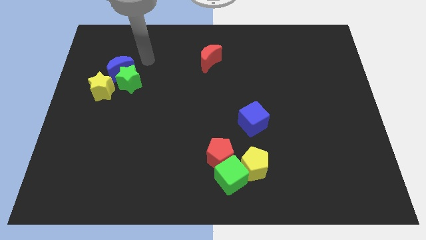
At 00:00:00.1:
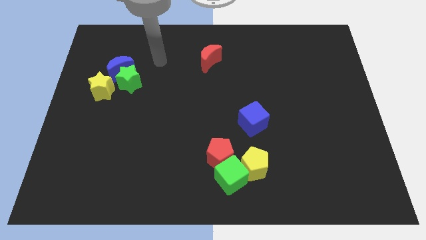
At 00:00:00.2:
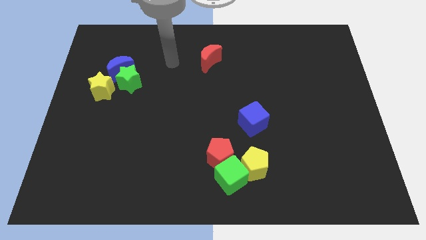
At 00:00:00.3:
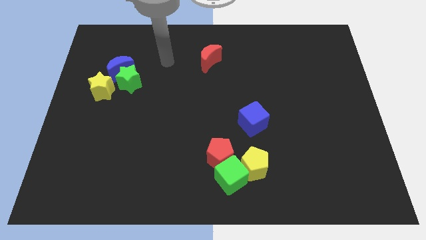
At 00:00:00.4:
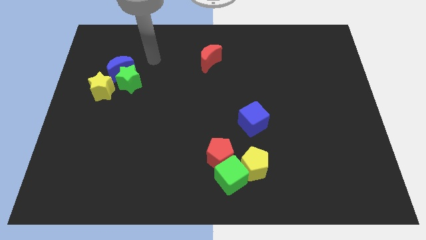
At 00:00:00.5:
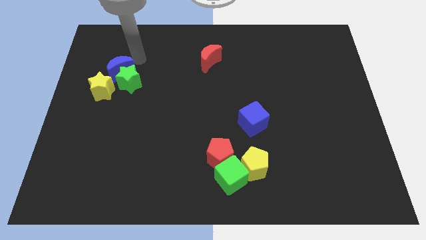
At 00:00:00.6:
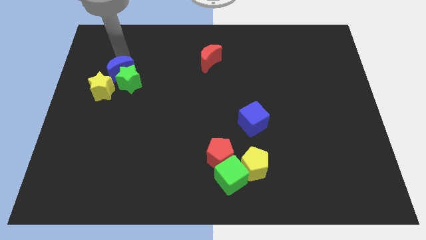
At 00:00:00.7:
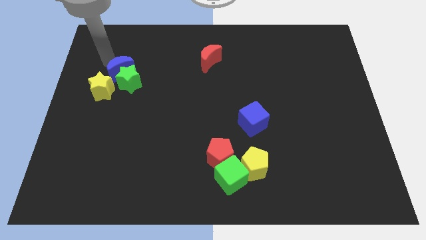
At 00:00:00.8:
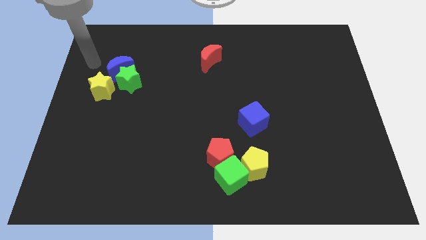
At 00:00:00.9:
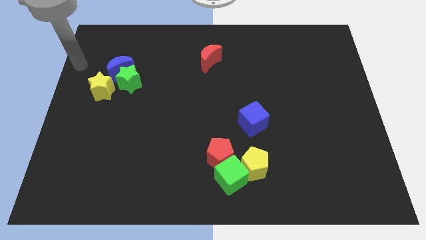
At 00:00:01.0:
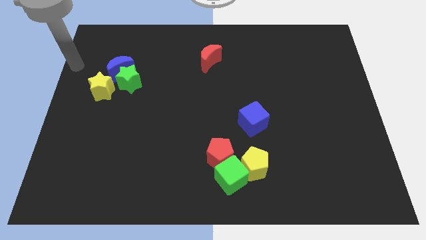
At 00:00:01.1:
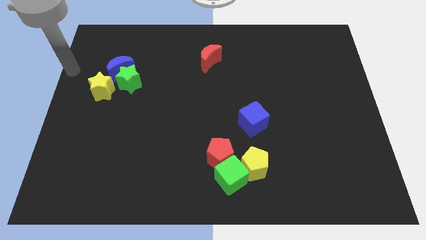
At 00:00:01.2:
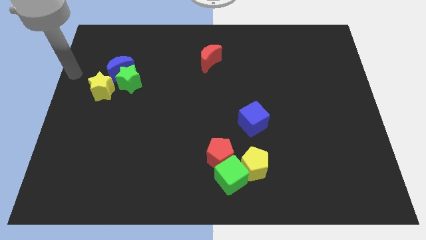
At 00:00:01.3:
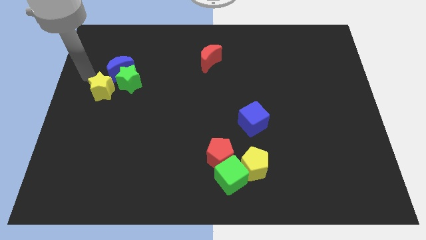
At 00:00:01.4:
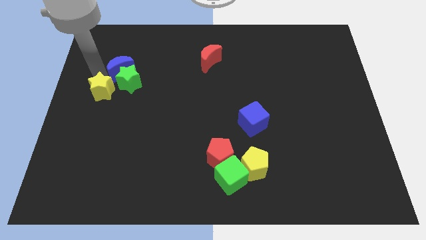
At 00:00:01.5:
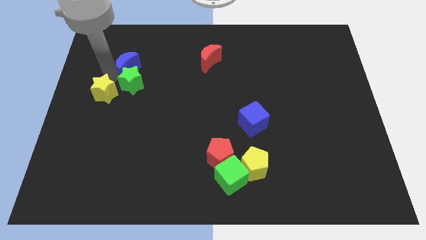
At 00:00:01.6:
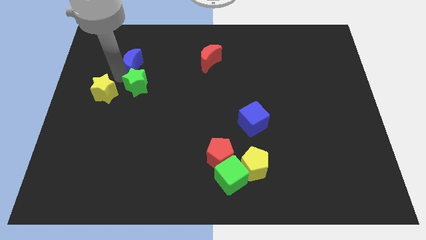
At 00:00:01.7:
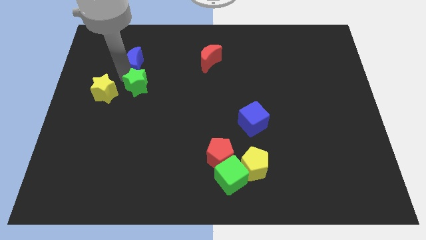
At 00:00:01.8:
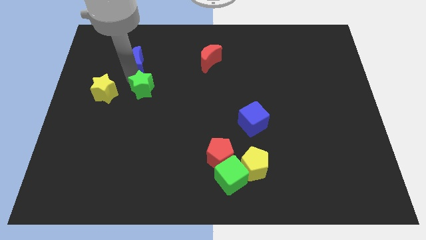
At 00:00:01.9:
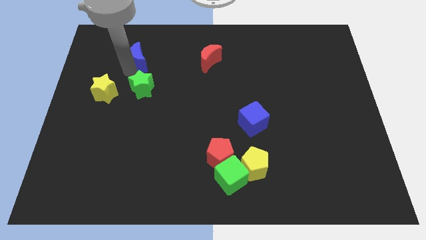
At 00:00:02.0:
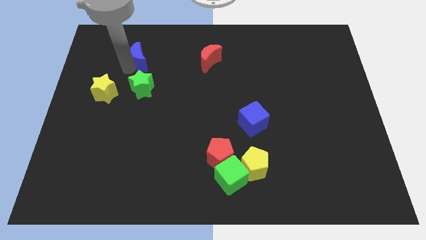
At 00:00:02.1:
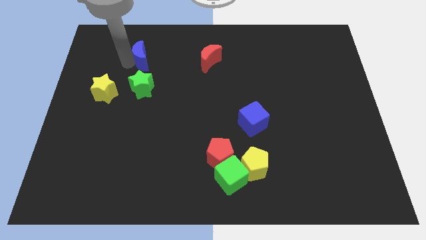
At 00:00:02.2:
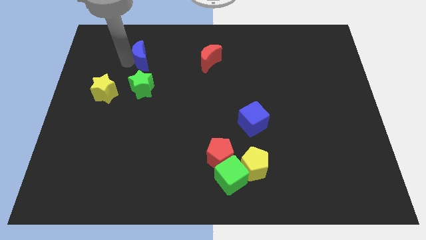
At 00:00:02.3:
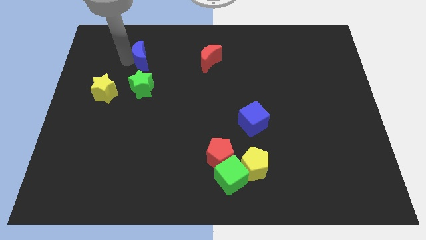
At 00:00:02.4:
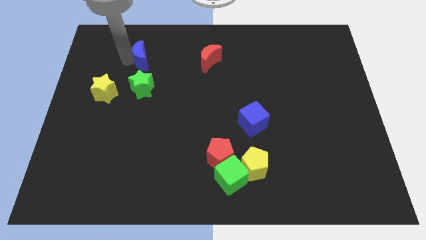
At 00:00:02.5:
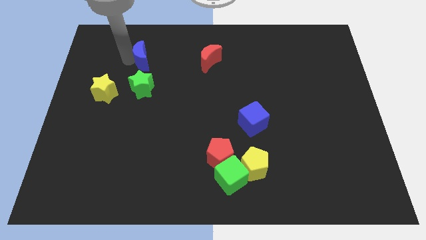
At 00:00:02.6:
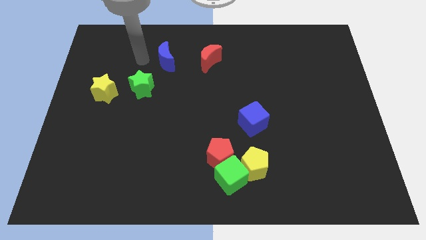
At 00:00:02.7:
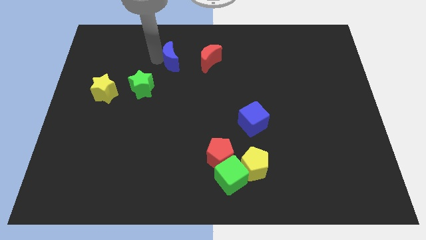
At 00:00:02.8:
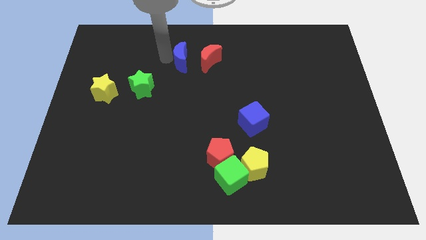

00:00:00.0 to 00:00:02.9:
place the blue crescent left to the red crescent

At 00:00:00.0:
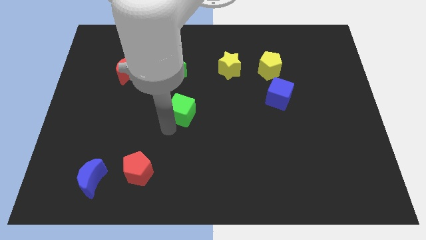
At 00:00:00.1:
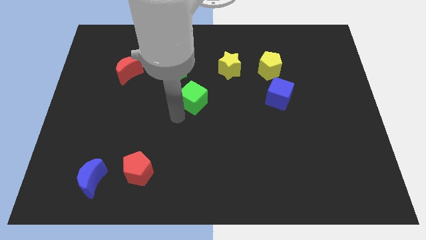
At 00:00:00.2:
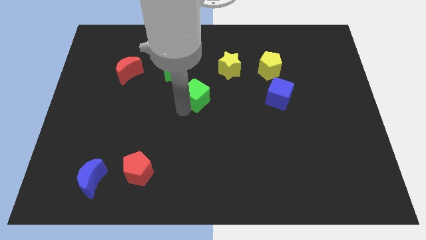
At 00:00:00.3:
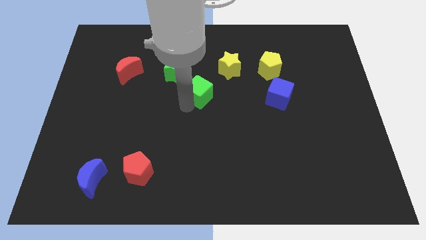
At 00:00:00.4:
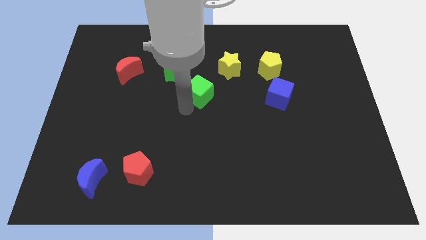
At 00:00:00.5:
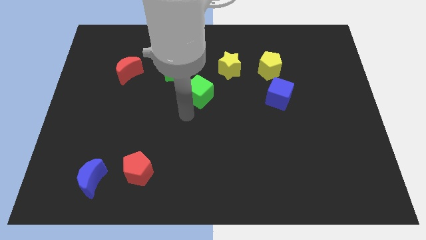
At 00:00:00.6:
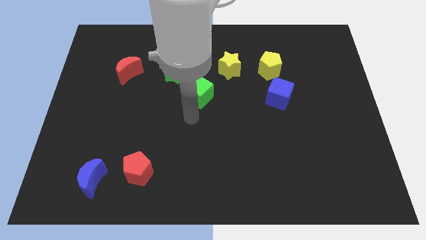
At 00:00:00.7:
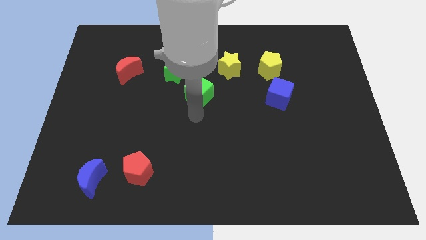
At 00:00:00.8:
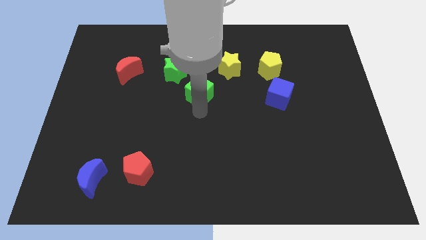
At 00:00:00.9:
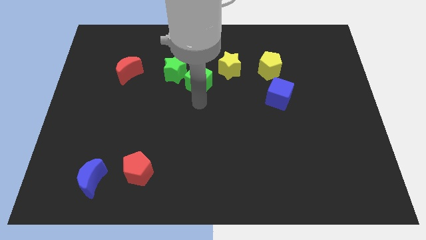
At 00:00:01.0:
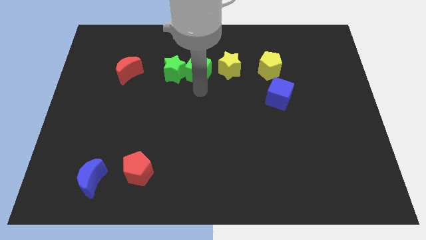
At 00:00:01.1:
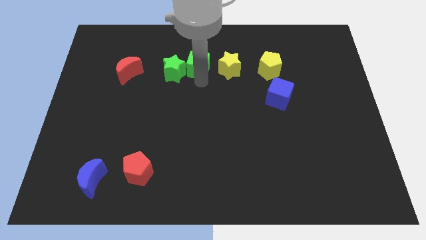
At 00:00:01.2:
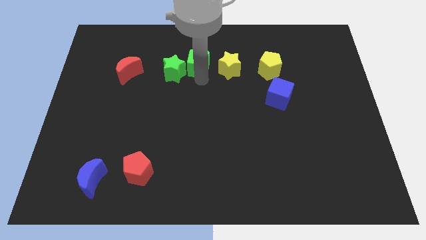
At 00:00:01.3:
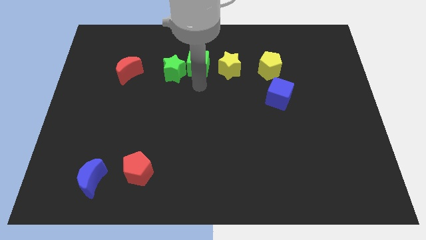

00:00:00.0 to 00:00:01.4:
place the green cube towards the left side of the yellow pentagon

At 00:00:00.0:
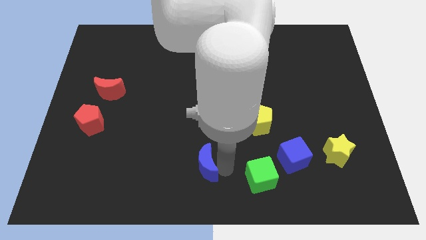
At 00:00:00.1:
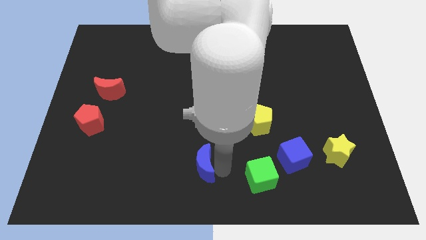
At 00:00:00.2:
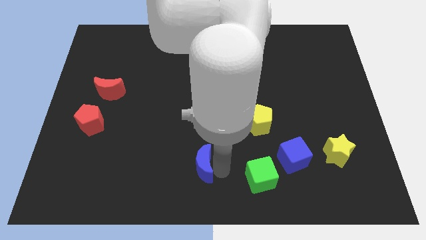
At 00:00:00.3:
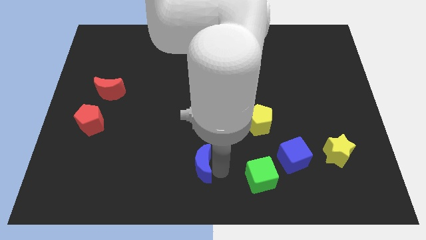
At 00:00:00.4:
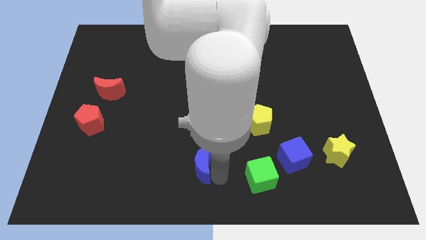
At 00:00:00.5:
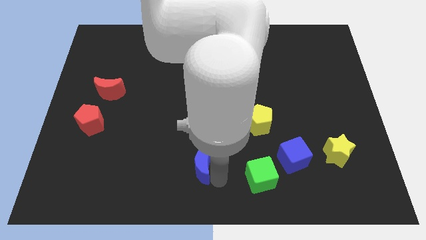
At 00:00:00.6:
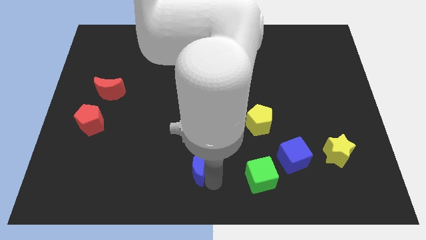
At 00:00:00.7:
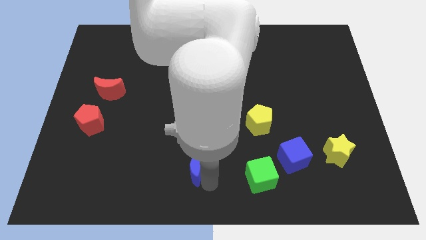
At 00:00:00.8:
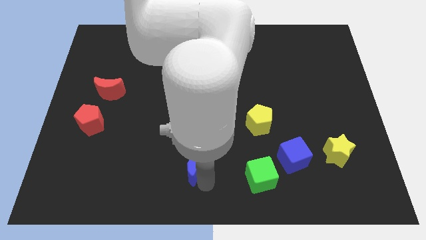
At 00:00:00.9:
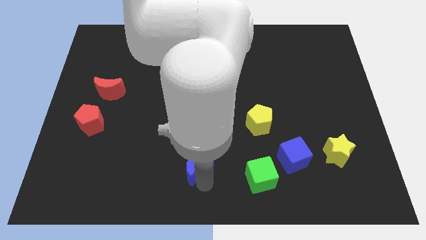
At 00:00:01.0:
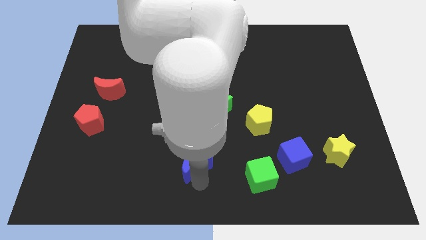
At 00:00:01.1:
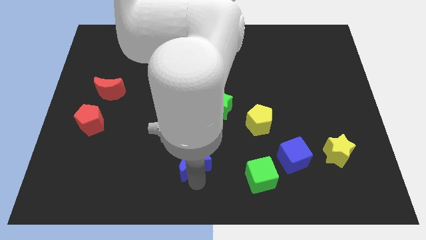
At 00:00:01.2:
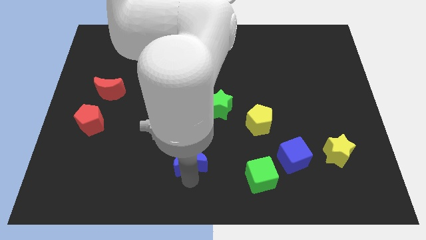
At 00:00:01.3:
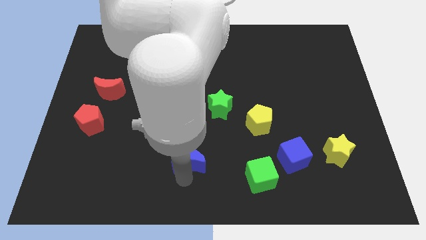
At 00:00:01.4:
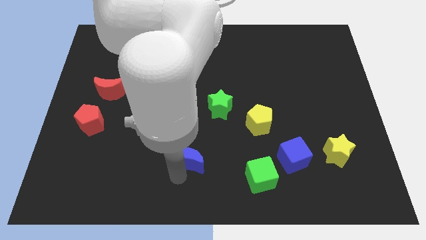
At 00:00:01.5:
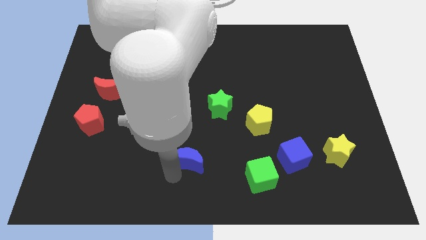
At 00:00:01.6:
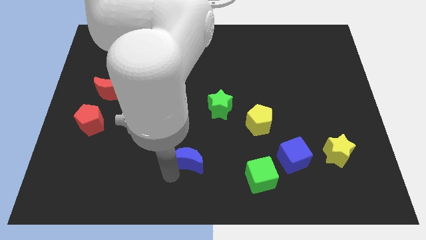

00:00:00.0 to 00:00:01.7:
move the blue crescent slightly to the left

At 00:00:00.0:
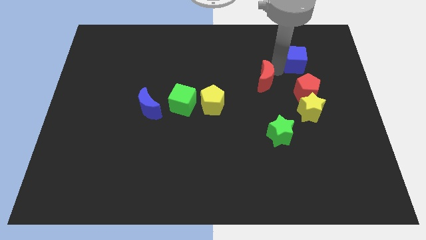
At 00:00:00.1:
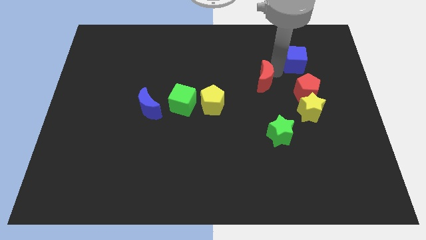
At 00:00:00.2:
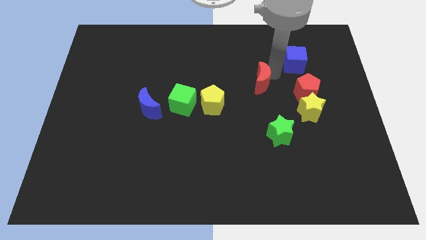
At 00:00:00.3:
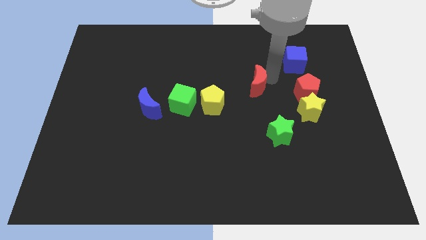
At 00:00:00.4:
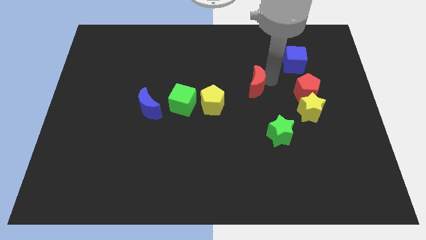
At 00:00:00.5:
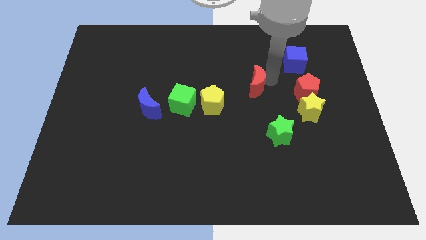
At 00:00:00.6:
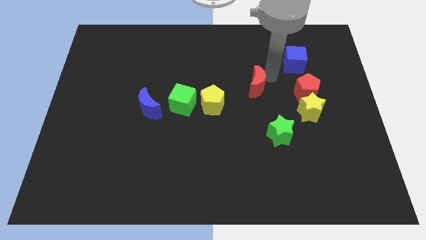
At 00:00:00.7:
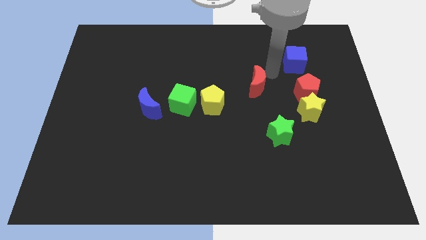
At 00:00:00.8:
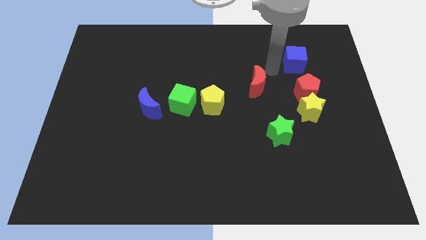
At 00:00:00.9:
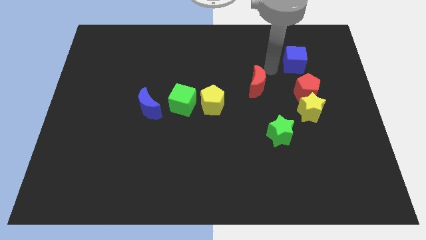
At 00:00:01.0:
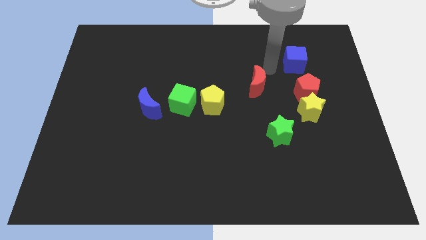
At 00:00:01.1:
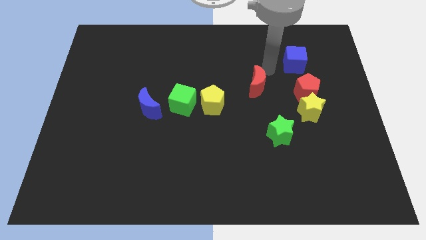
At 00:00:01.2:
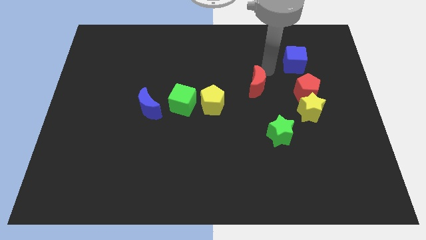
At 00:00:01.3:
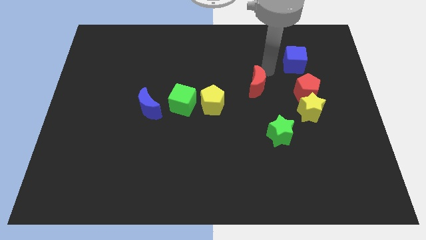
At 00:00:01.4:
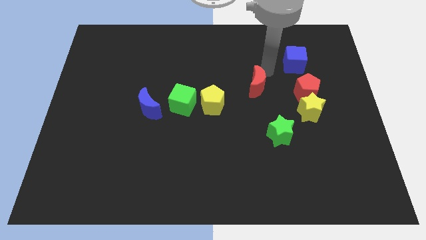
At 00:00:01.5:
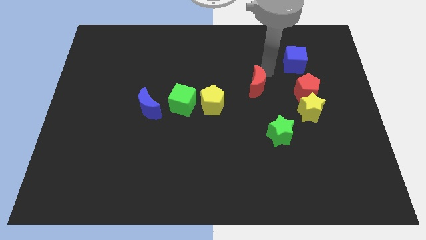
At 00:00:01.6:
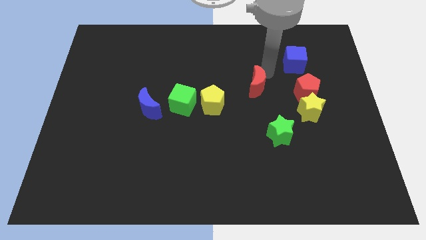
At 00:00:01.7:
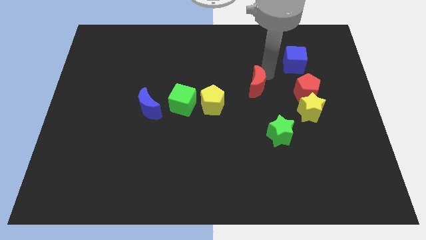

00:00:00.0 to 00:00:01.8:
place the red crescent to the left of the red pentagon

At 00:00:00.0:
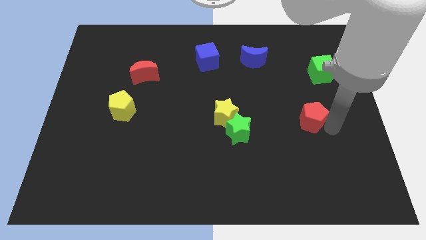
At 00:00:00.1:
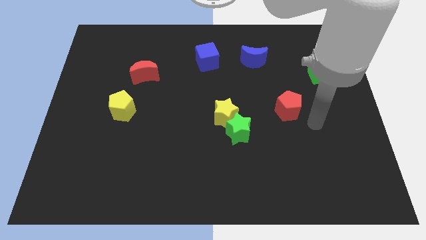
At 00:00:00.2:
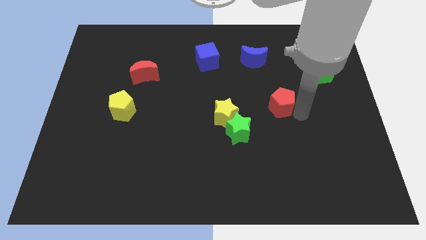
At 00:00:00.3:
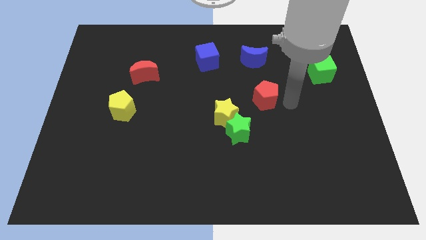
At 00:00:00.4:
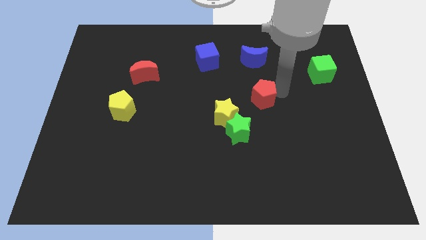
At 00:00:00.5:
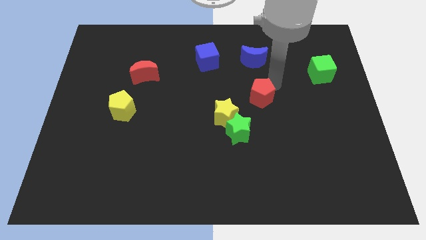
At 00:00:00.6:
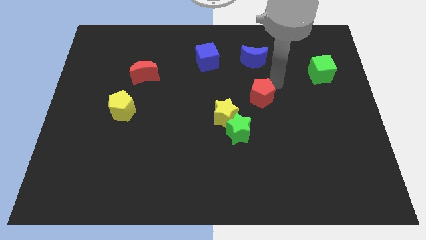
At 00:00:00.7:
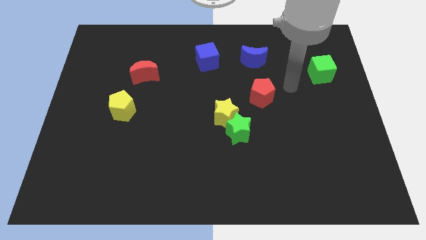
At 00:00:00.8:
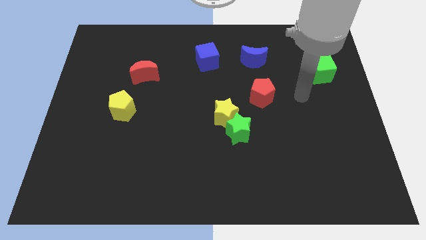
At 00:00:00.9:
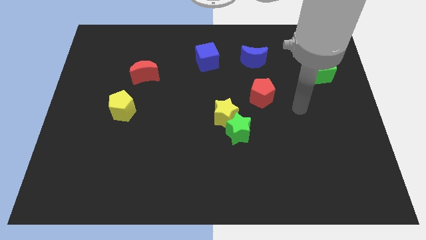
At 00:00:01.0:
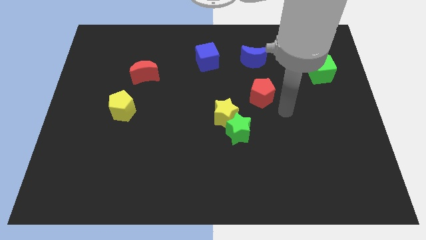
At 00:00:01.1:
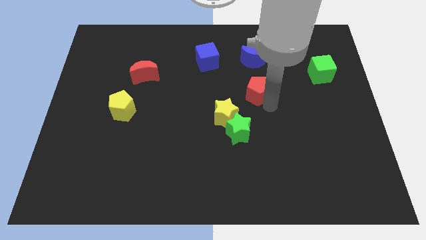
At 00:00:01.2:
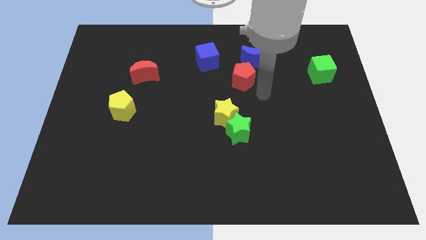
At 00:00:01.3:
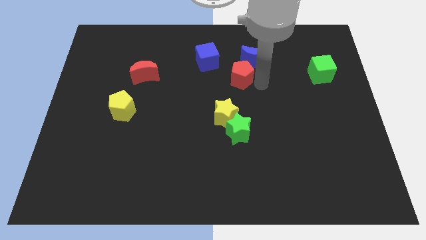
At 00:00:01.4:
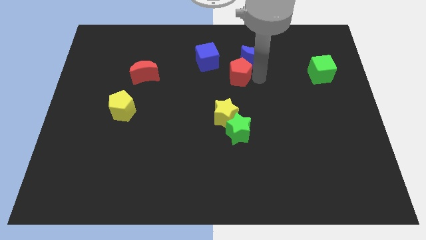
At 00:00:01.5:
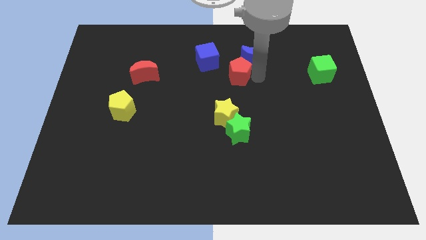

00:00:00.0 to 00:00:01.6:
place red pentagon below blue crescent
